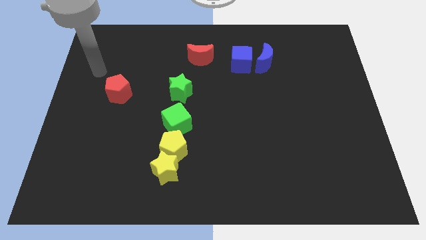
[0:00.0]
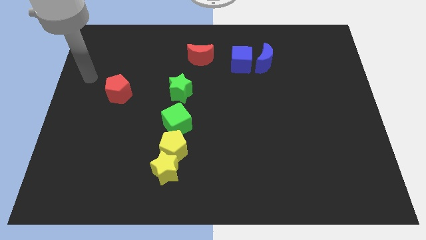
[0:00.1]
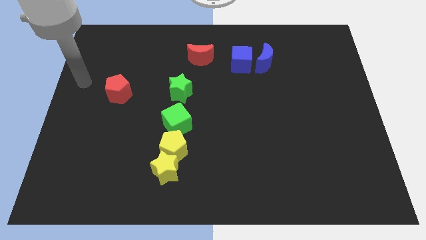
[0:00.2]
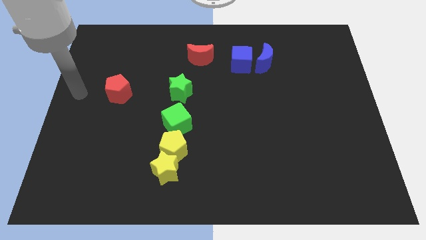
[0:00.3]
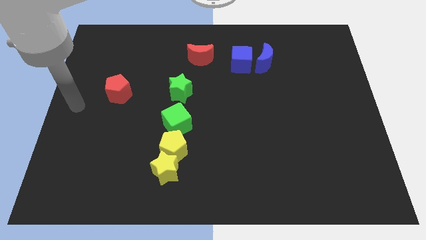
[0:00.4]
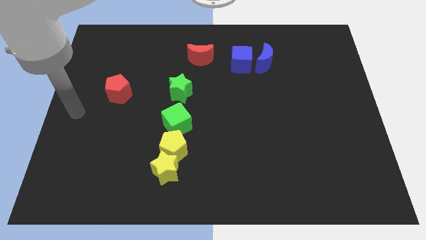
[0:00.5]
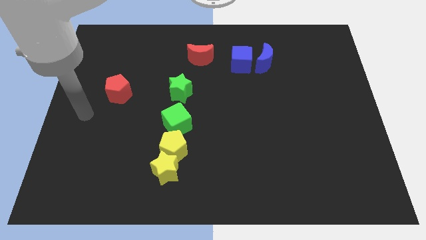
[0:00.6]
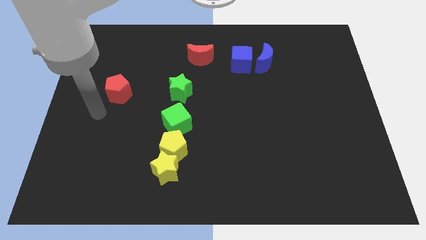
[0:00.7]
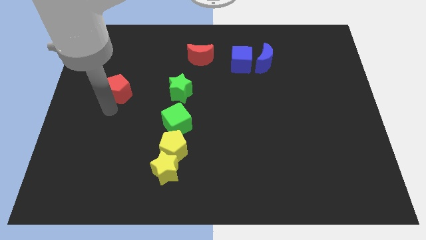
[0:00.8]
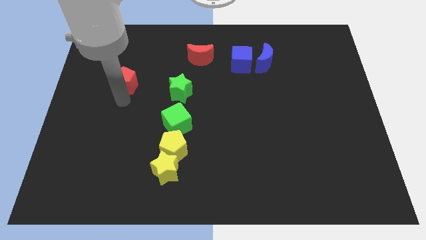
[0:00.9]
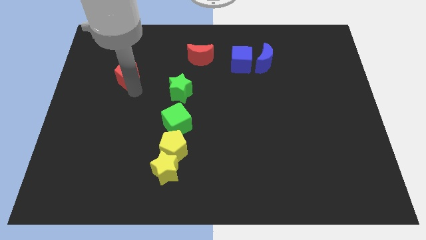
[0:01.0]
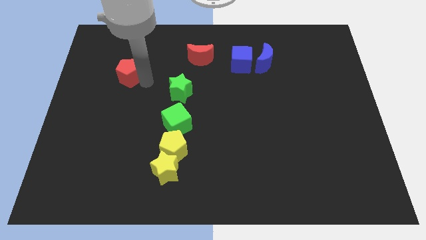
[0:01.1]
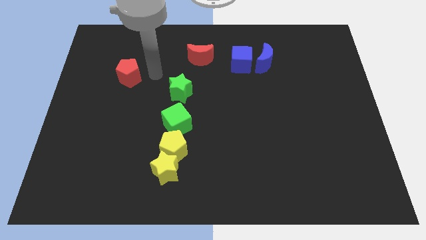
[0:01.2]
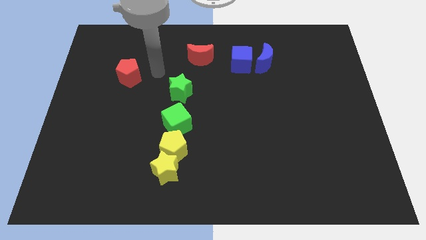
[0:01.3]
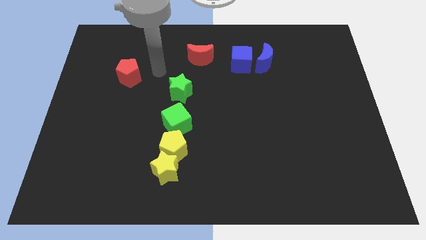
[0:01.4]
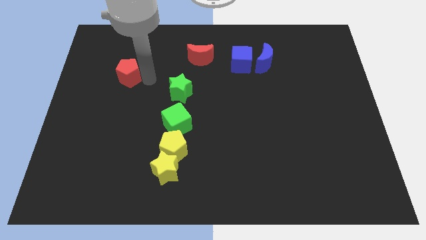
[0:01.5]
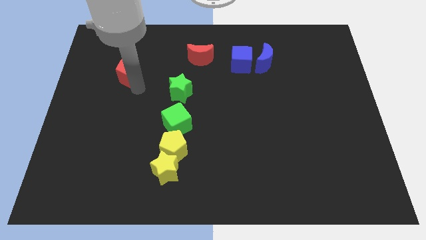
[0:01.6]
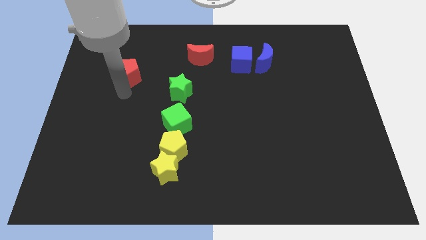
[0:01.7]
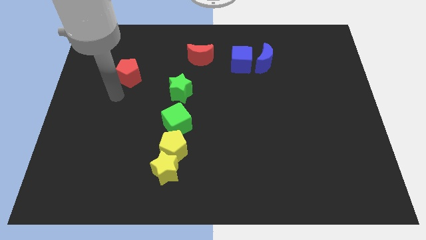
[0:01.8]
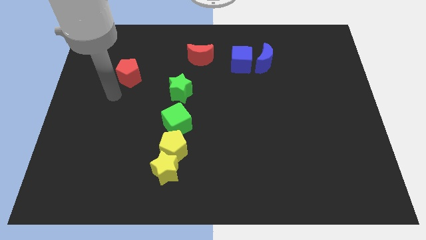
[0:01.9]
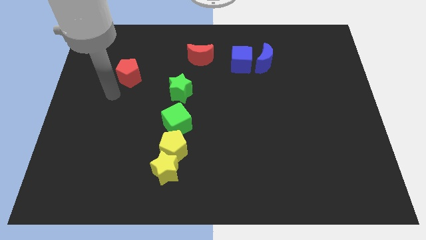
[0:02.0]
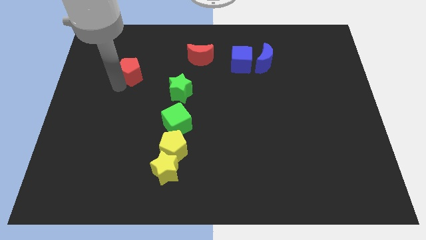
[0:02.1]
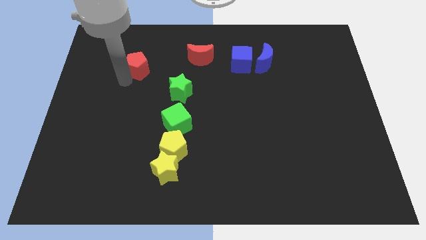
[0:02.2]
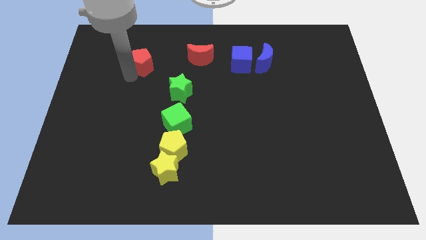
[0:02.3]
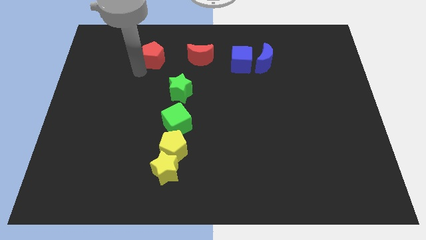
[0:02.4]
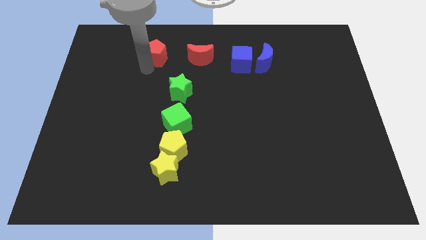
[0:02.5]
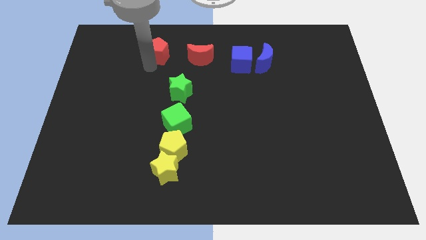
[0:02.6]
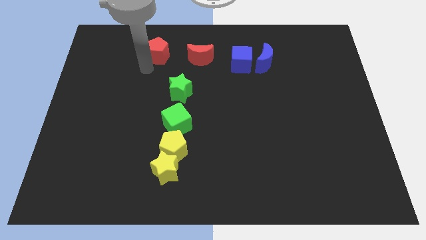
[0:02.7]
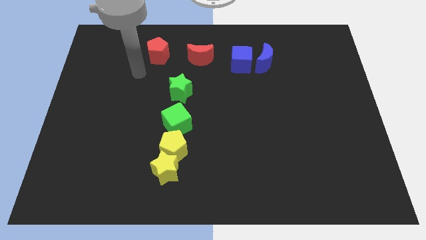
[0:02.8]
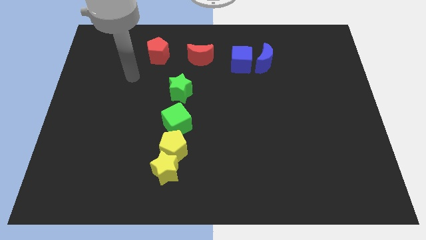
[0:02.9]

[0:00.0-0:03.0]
move the red pentagon to left side of red moon

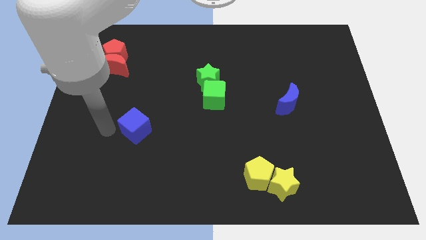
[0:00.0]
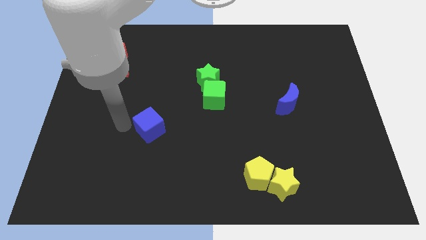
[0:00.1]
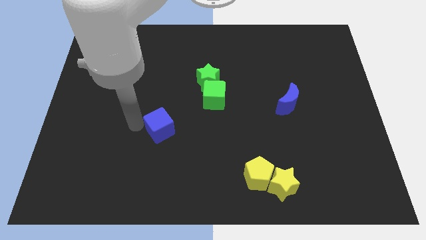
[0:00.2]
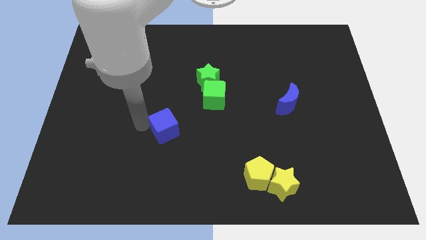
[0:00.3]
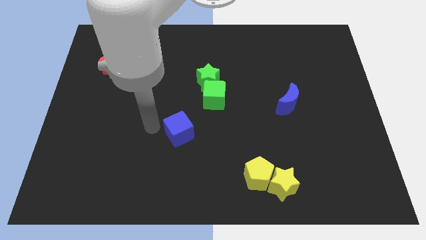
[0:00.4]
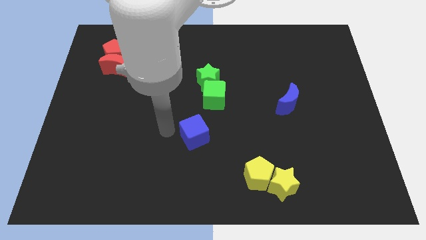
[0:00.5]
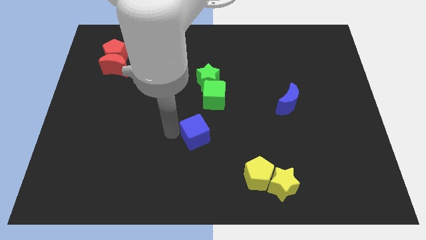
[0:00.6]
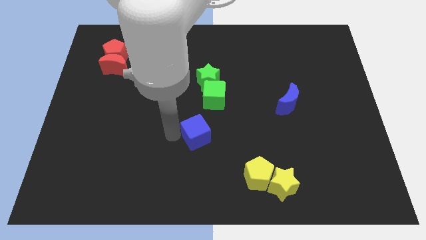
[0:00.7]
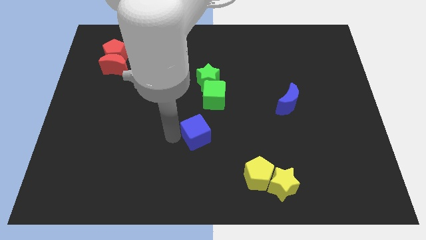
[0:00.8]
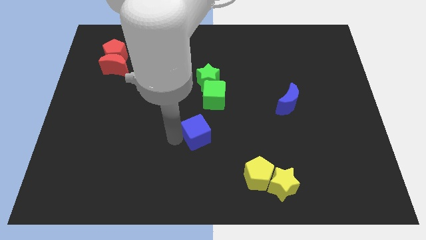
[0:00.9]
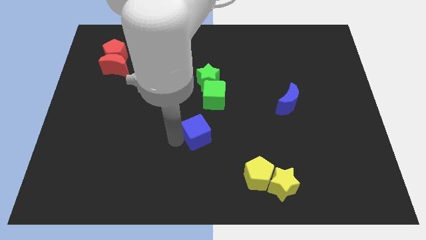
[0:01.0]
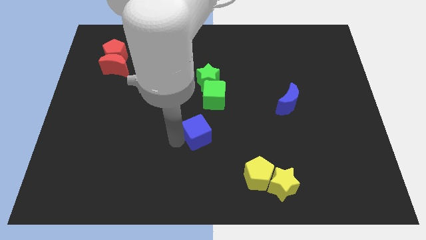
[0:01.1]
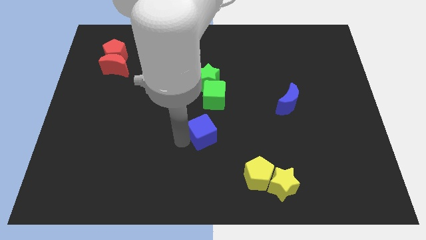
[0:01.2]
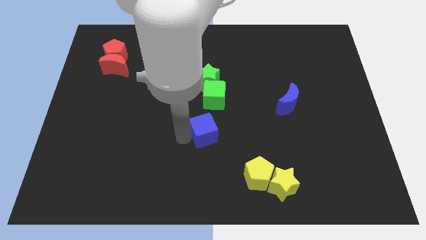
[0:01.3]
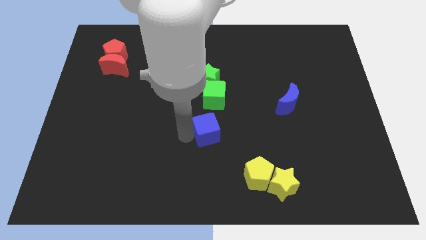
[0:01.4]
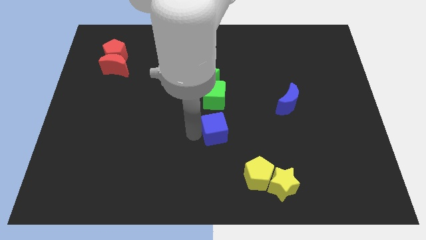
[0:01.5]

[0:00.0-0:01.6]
place the blue cube below the green cube

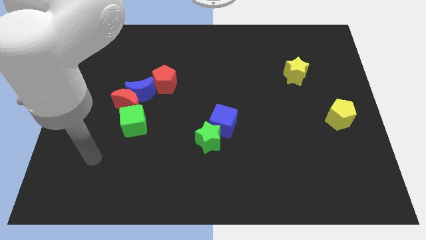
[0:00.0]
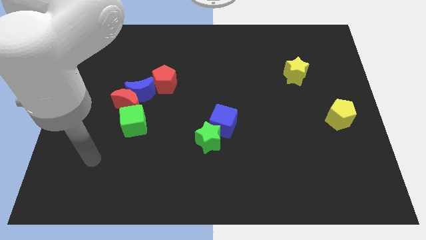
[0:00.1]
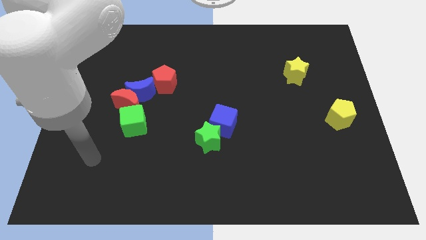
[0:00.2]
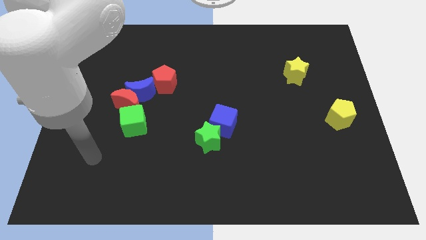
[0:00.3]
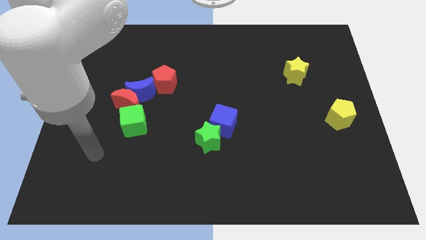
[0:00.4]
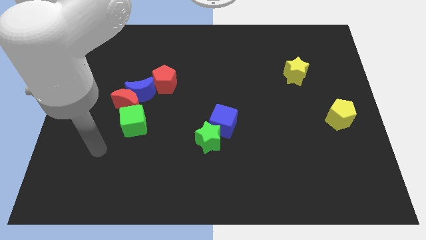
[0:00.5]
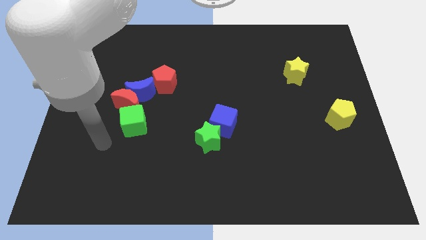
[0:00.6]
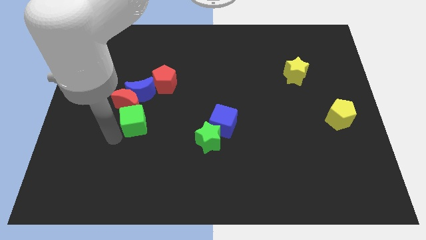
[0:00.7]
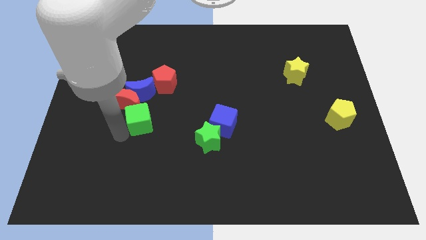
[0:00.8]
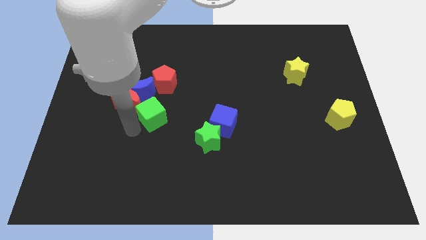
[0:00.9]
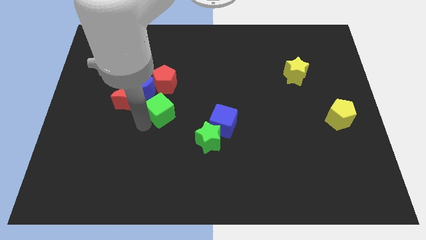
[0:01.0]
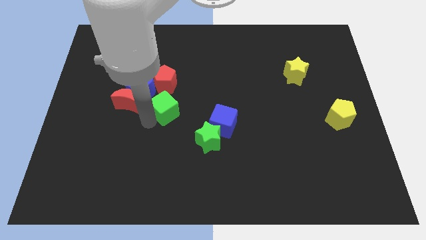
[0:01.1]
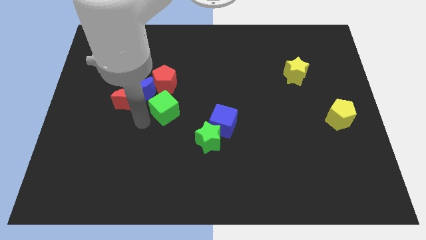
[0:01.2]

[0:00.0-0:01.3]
move the blue cube slightly up

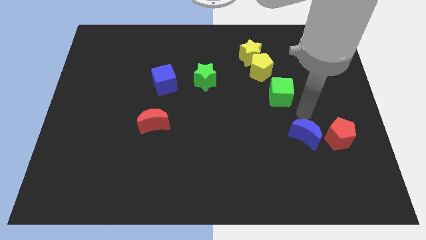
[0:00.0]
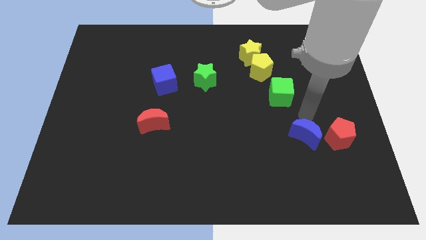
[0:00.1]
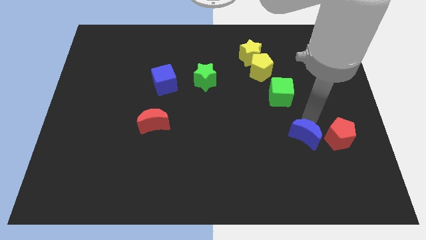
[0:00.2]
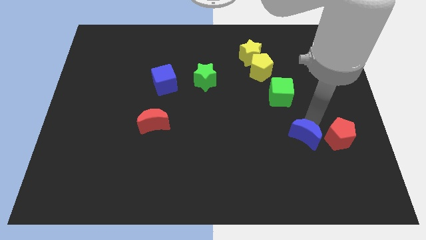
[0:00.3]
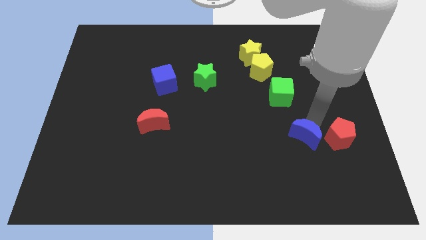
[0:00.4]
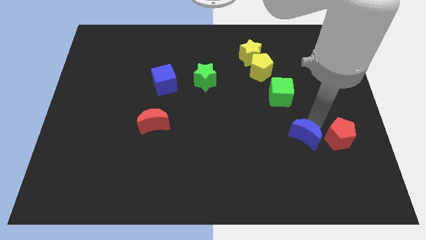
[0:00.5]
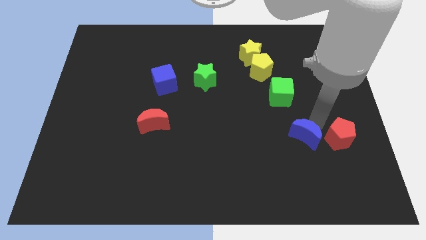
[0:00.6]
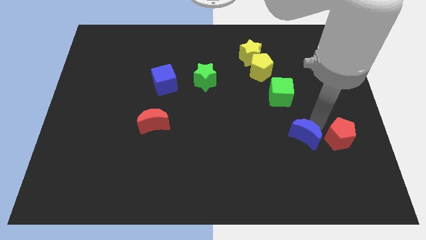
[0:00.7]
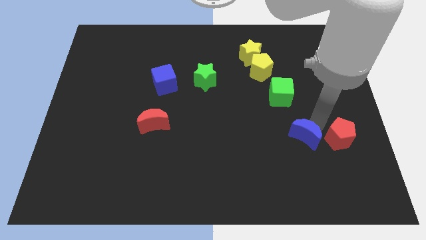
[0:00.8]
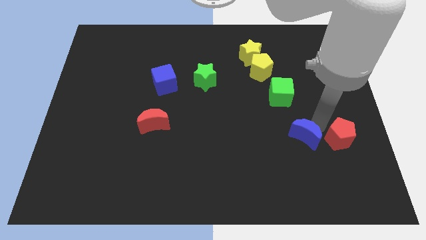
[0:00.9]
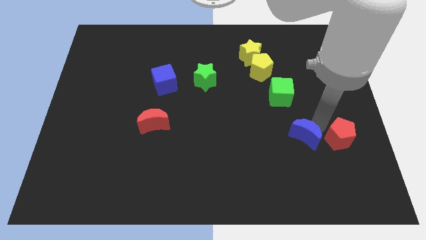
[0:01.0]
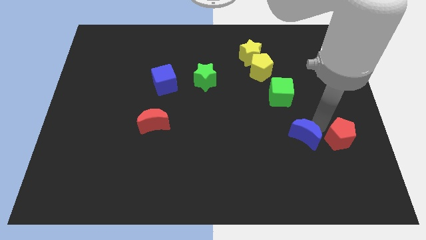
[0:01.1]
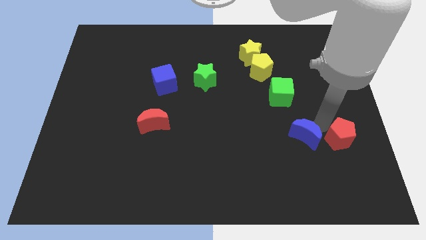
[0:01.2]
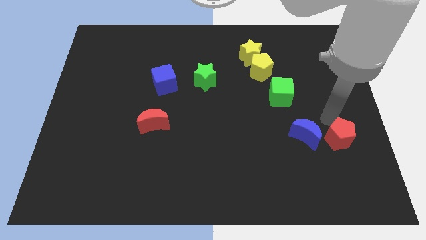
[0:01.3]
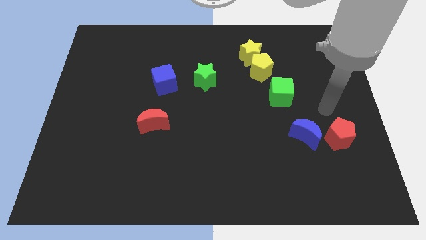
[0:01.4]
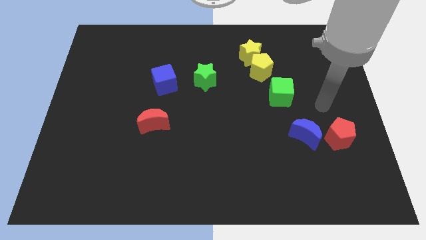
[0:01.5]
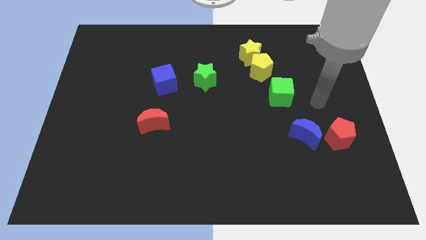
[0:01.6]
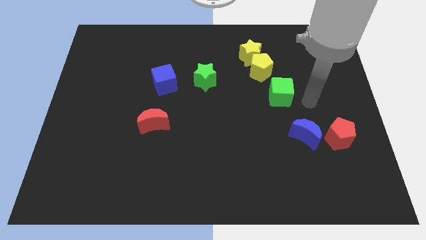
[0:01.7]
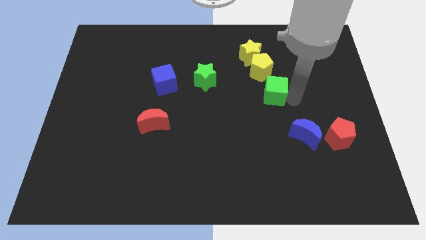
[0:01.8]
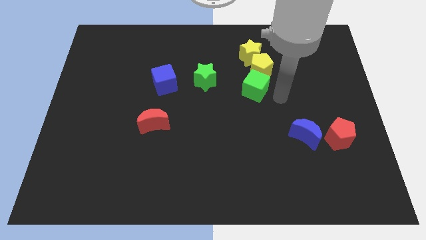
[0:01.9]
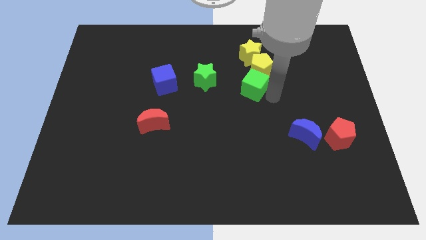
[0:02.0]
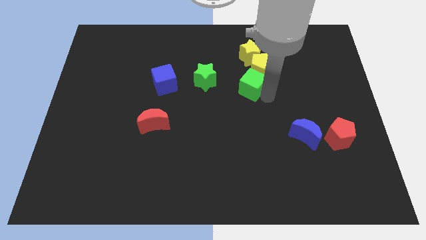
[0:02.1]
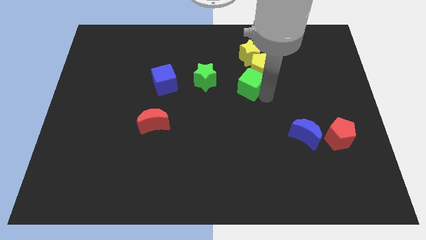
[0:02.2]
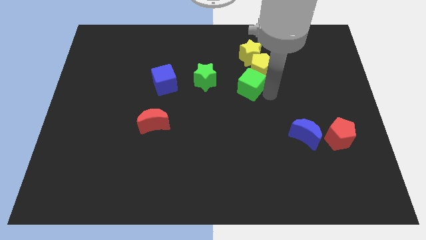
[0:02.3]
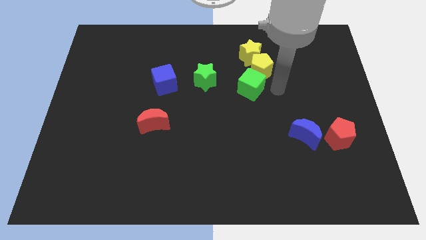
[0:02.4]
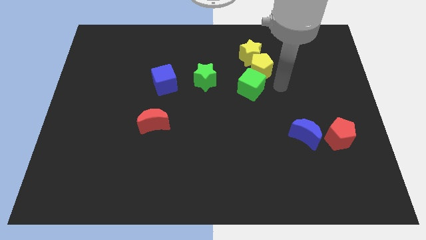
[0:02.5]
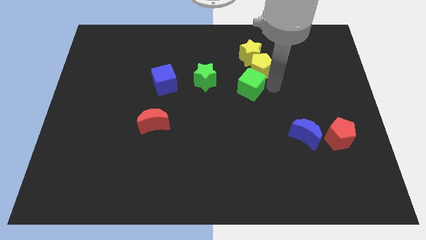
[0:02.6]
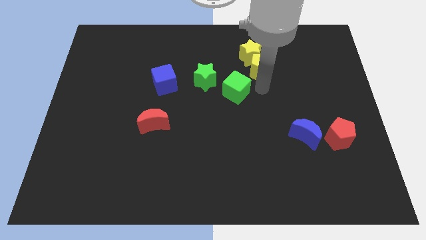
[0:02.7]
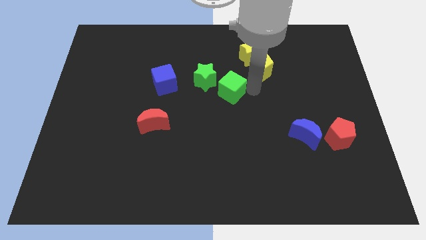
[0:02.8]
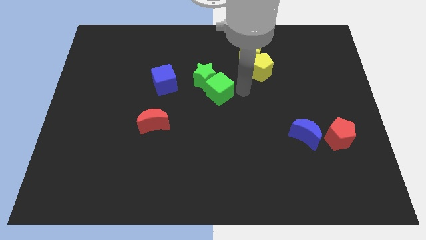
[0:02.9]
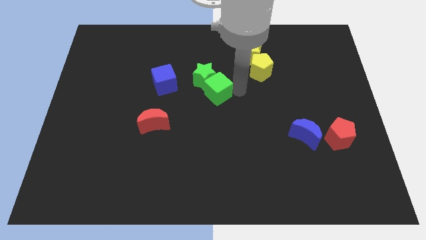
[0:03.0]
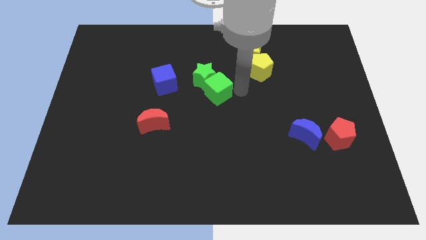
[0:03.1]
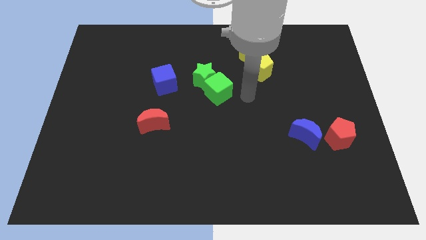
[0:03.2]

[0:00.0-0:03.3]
move the green cube to the bottom right of the green star
